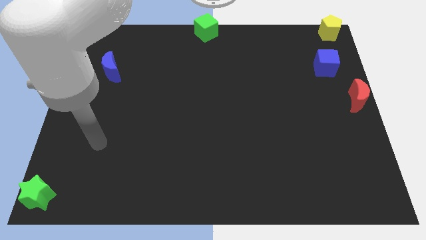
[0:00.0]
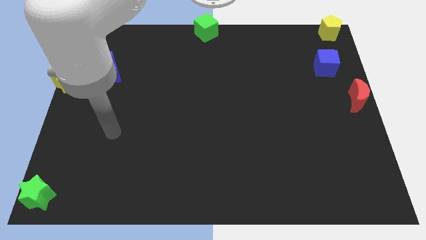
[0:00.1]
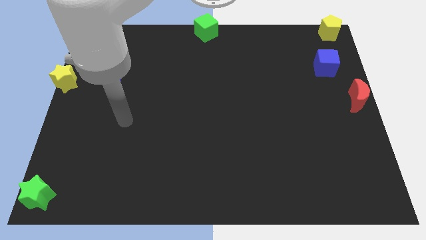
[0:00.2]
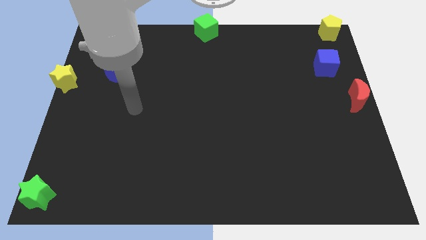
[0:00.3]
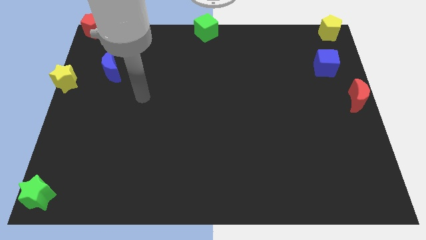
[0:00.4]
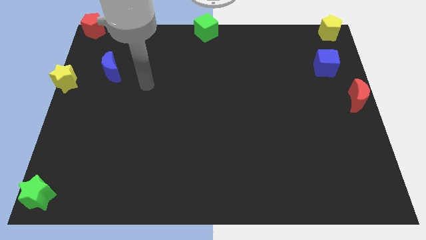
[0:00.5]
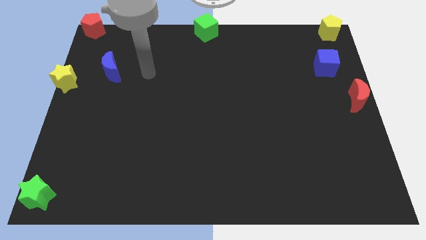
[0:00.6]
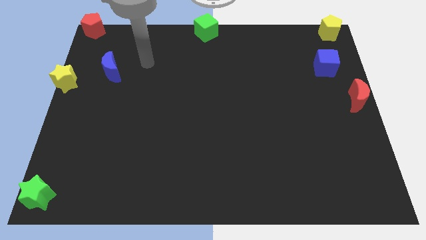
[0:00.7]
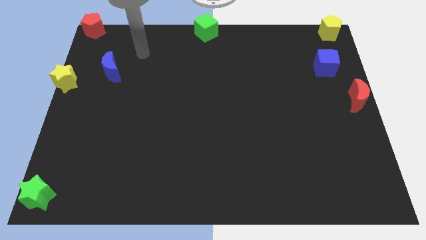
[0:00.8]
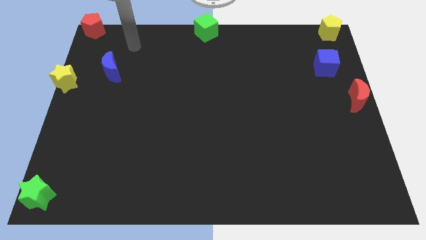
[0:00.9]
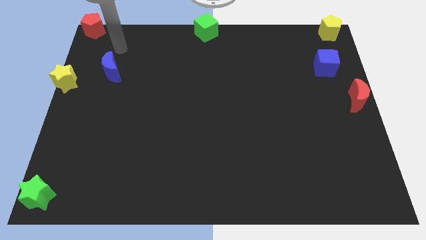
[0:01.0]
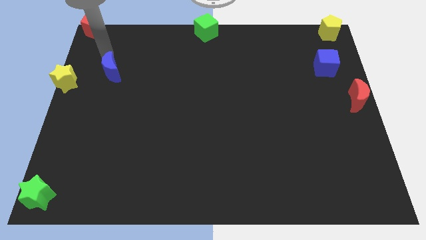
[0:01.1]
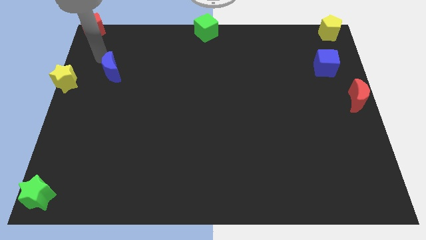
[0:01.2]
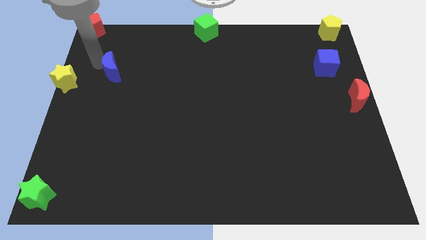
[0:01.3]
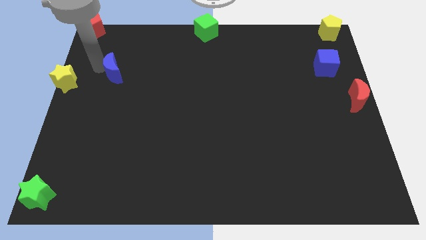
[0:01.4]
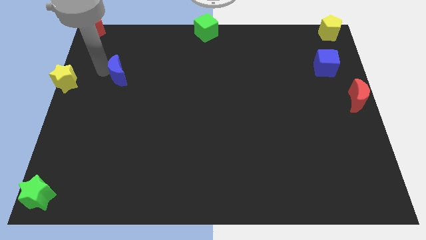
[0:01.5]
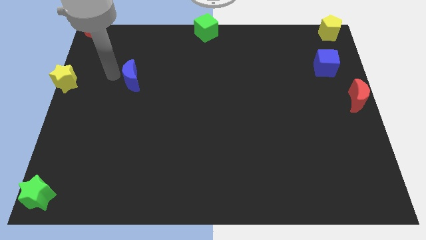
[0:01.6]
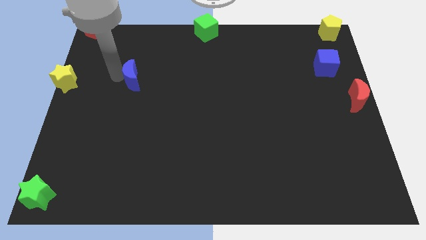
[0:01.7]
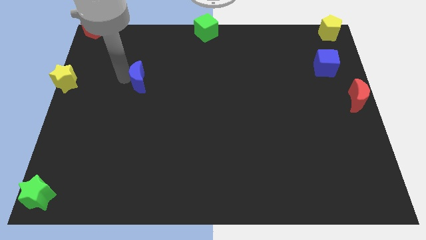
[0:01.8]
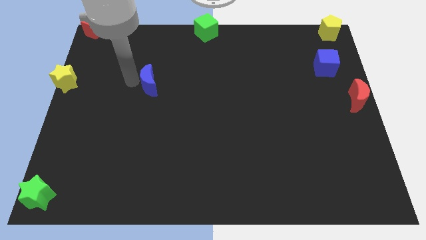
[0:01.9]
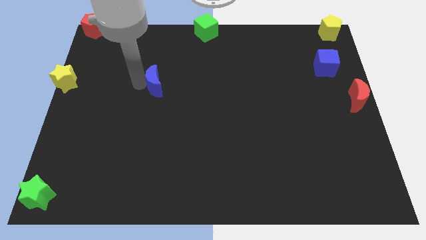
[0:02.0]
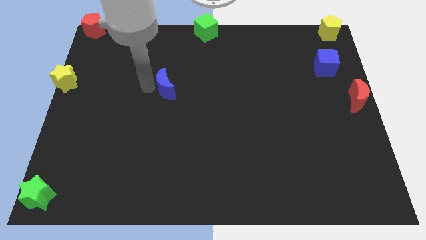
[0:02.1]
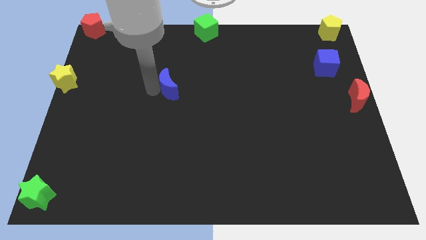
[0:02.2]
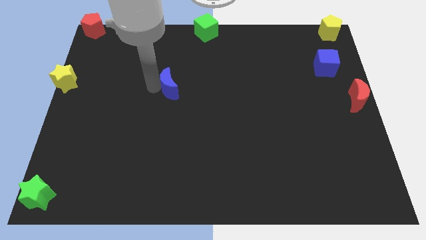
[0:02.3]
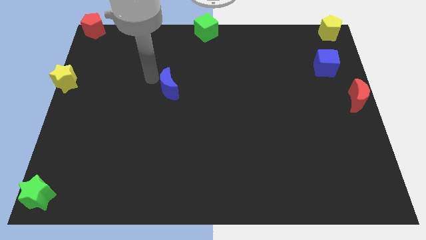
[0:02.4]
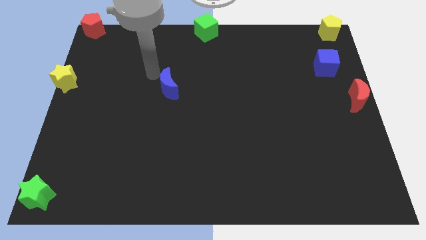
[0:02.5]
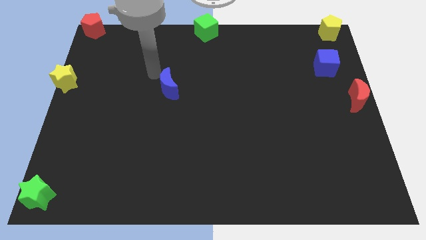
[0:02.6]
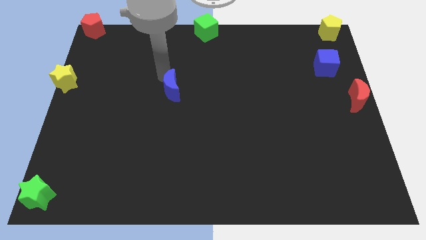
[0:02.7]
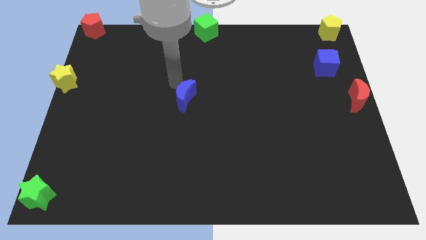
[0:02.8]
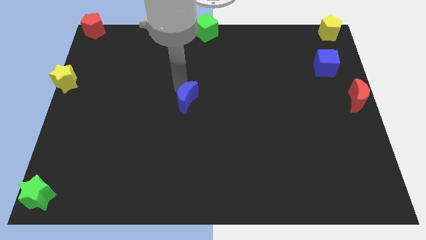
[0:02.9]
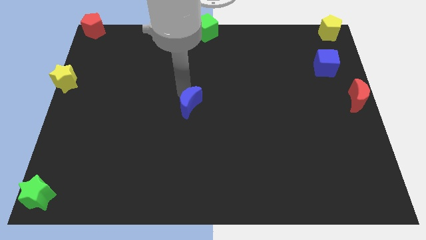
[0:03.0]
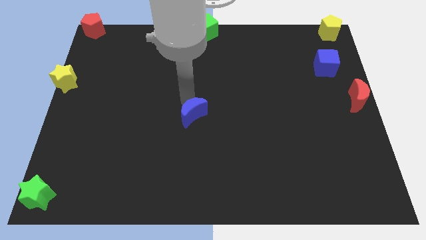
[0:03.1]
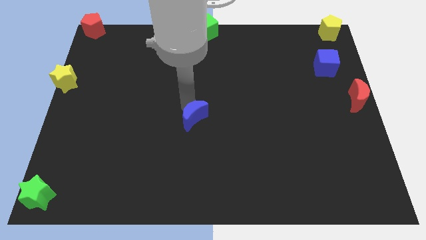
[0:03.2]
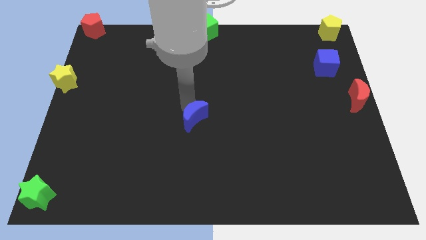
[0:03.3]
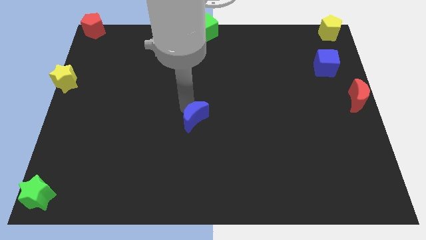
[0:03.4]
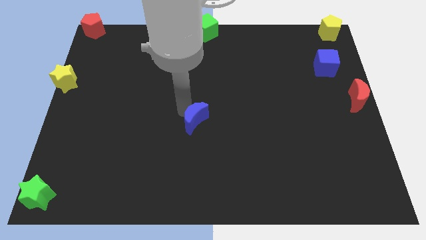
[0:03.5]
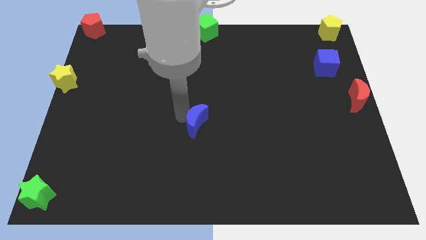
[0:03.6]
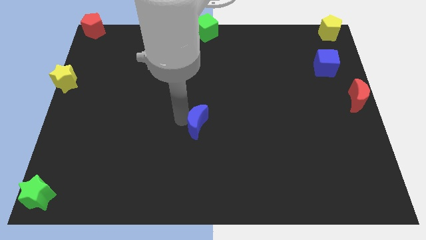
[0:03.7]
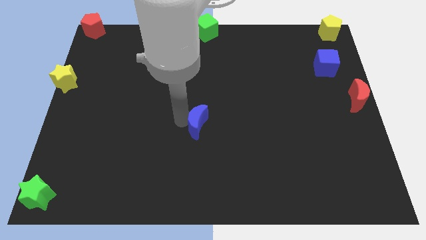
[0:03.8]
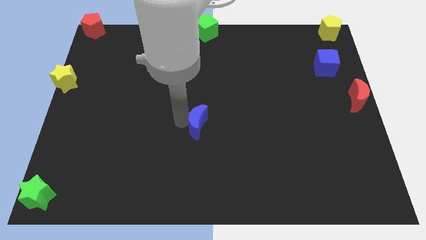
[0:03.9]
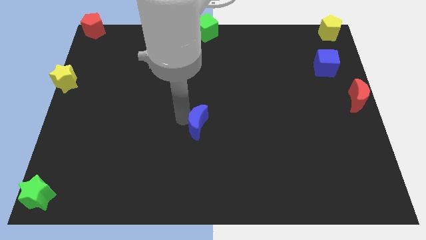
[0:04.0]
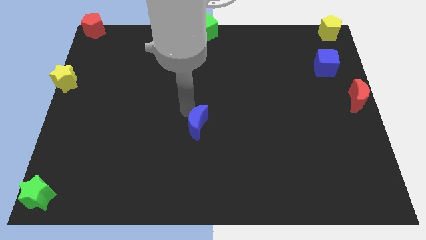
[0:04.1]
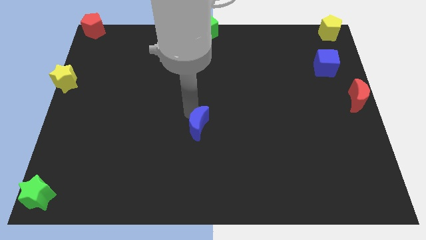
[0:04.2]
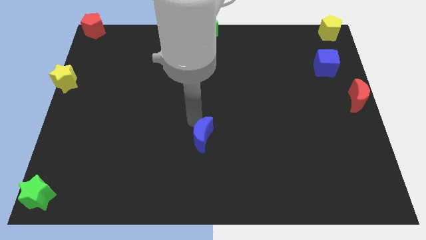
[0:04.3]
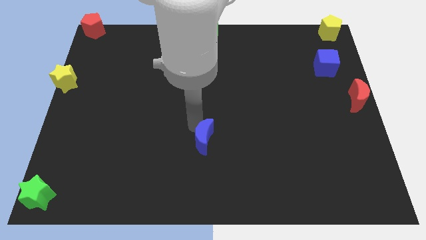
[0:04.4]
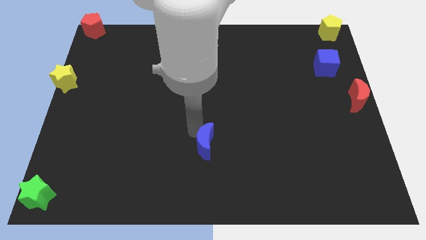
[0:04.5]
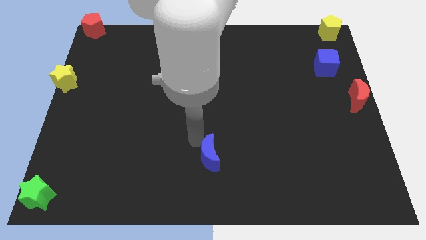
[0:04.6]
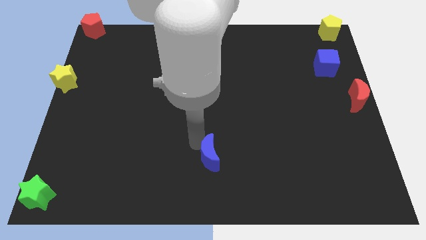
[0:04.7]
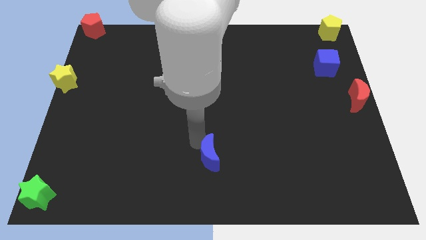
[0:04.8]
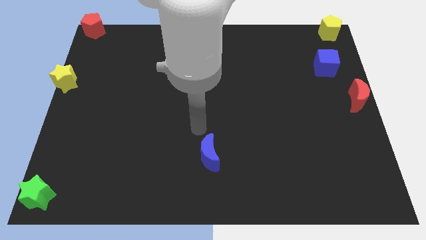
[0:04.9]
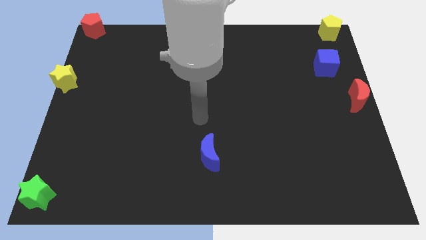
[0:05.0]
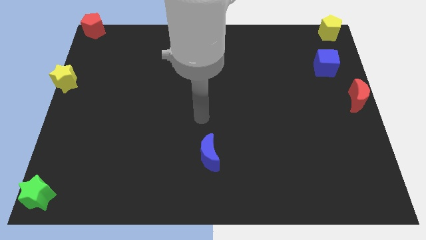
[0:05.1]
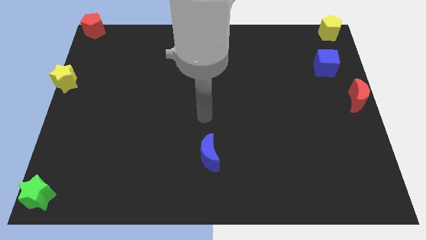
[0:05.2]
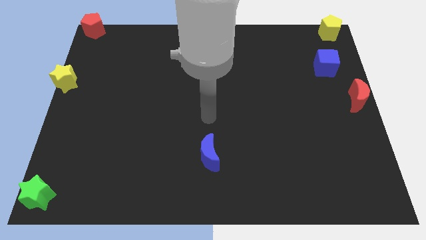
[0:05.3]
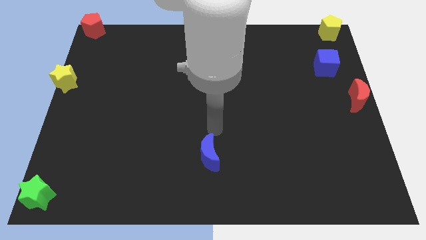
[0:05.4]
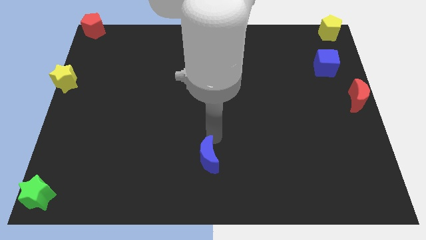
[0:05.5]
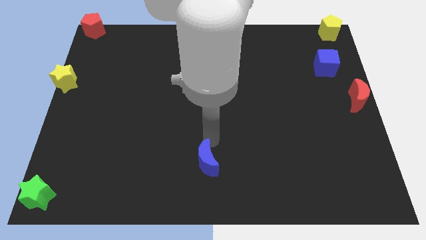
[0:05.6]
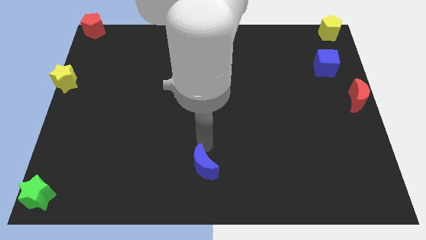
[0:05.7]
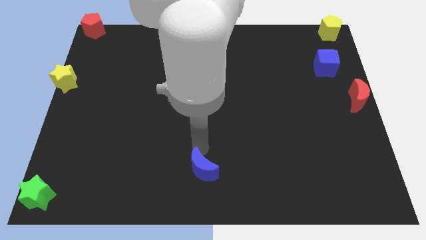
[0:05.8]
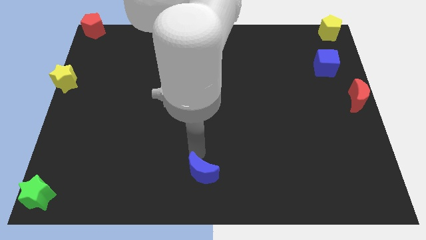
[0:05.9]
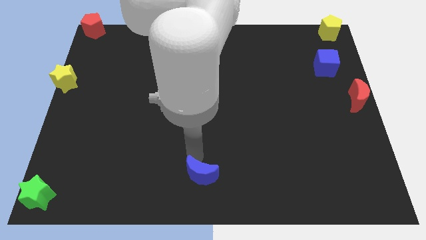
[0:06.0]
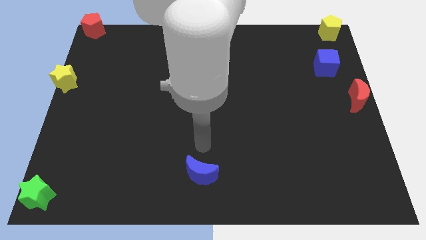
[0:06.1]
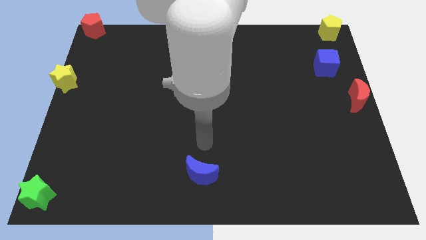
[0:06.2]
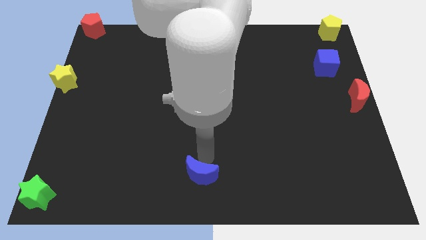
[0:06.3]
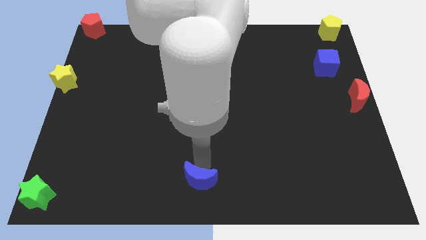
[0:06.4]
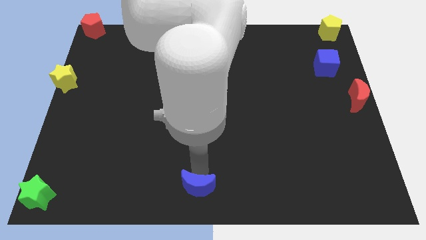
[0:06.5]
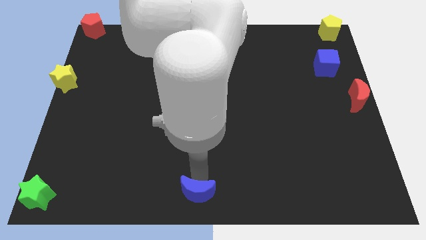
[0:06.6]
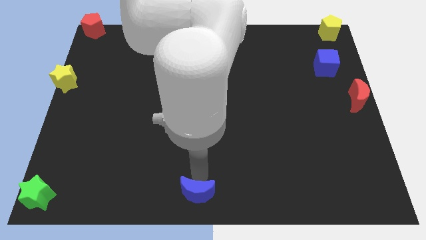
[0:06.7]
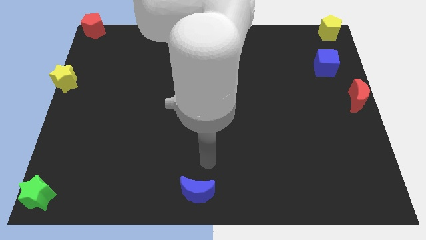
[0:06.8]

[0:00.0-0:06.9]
move the blue moon to the bottom center of the board

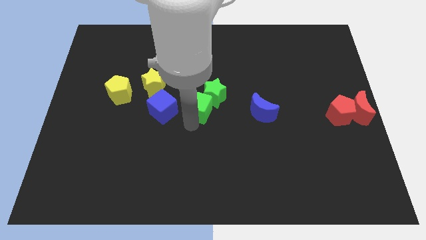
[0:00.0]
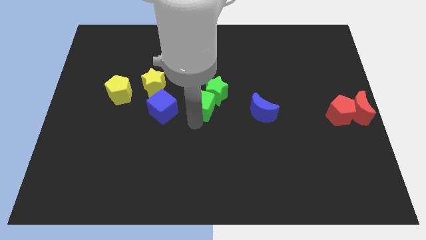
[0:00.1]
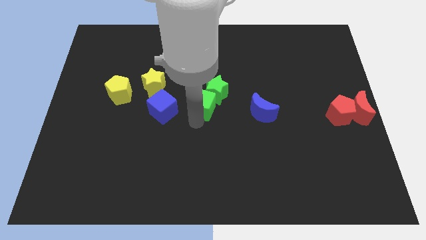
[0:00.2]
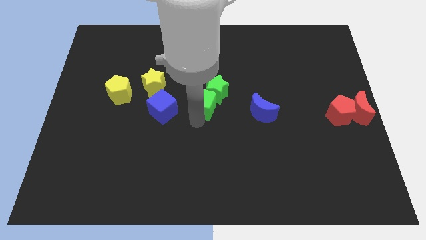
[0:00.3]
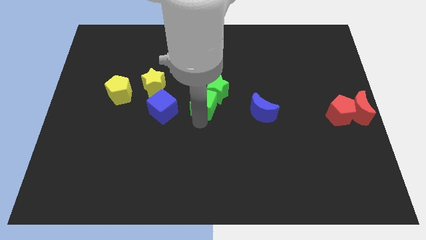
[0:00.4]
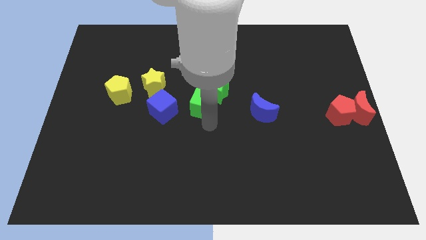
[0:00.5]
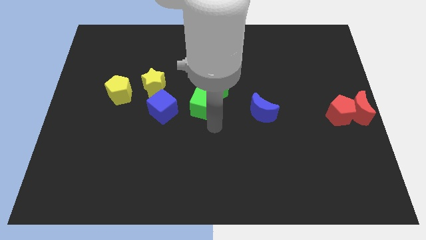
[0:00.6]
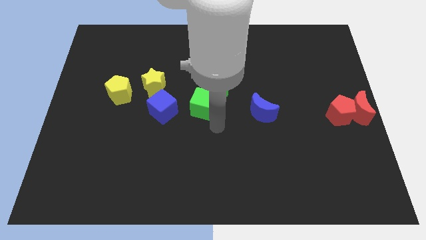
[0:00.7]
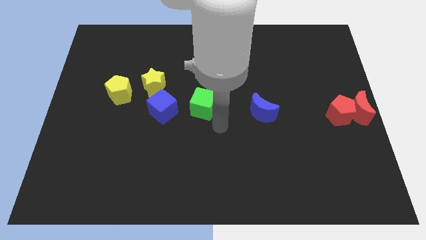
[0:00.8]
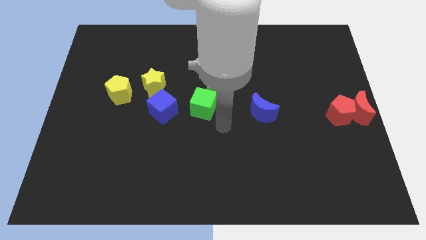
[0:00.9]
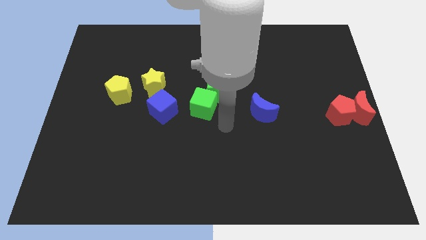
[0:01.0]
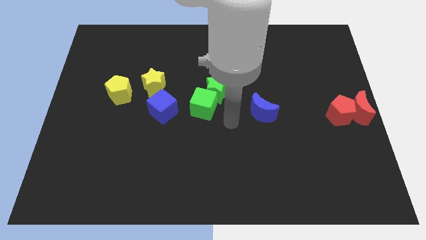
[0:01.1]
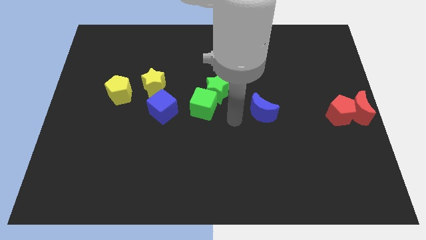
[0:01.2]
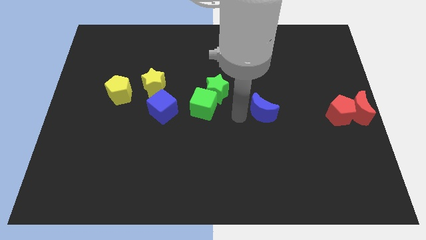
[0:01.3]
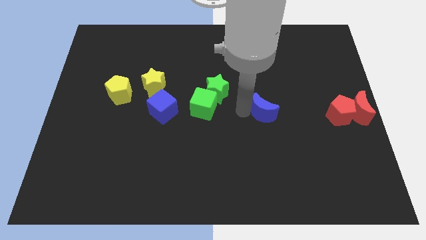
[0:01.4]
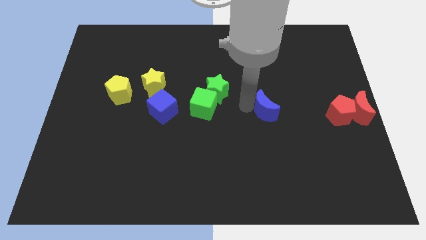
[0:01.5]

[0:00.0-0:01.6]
move your arm away from green cube

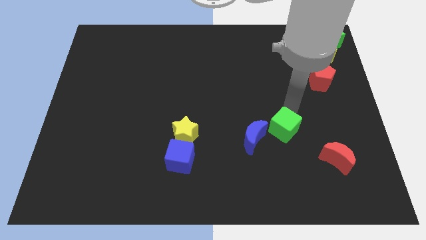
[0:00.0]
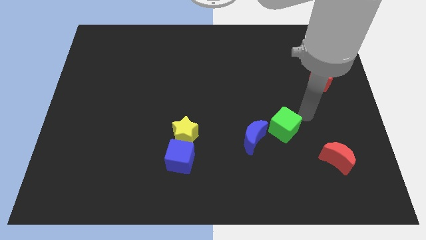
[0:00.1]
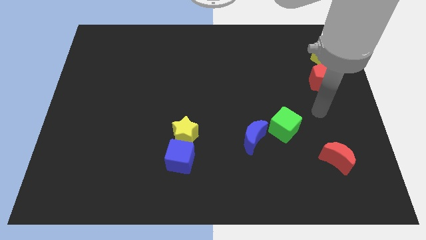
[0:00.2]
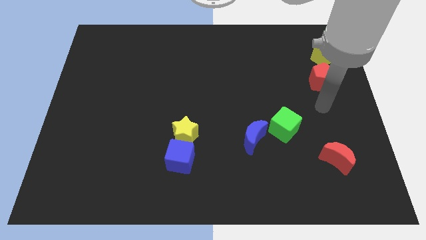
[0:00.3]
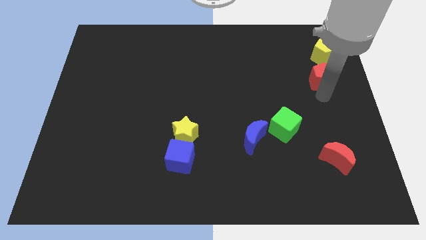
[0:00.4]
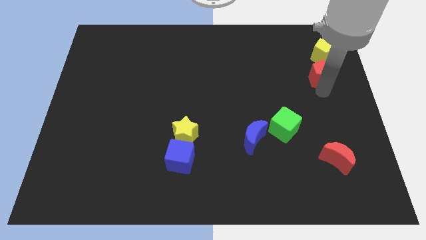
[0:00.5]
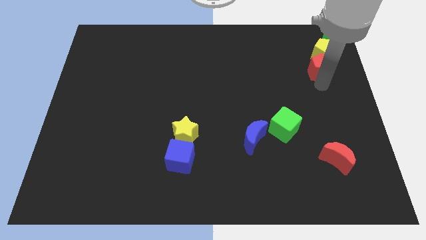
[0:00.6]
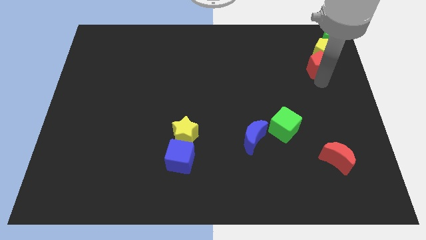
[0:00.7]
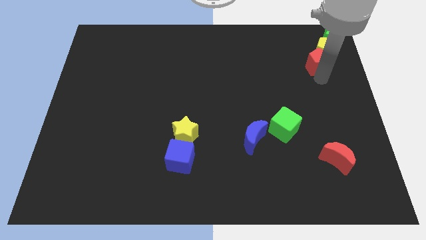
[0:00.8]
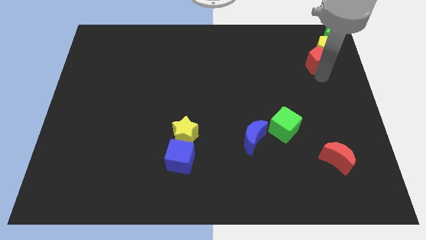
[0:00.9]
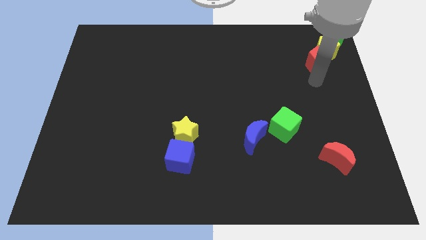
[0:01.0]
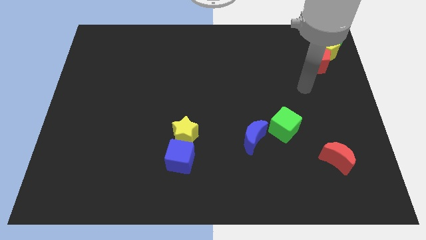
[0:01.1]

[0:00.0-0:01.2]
push the red pentagon into the yellow pentagon
